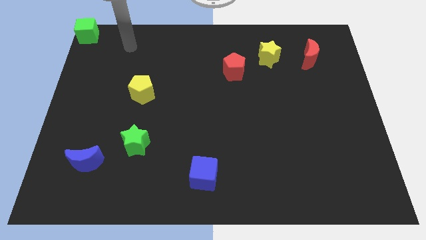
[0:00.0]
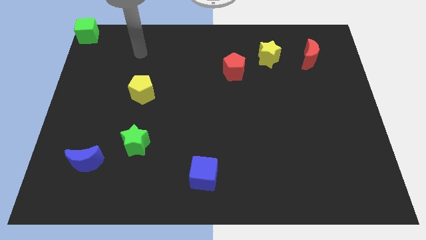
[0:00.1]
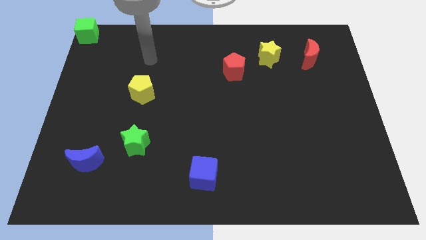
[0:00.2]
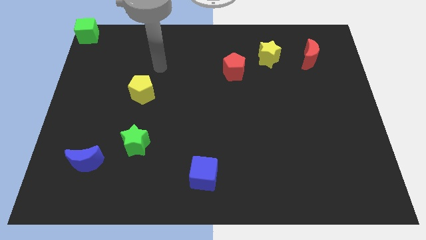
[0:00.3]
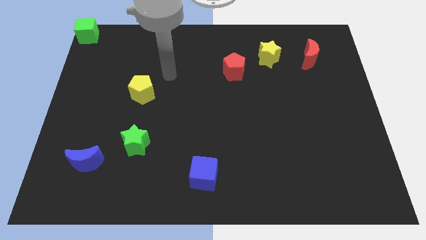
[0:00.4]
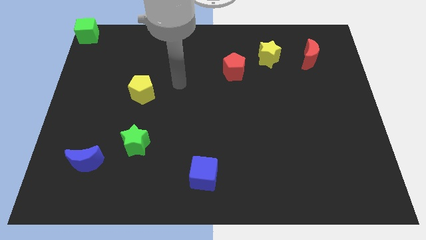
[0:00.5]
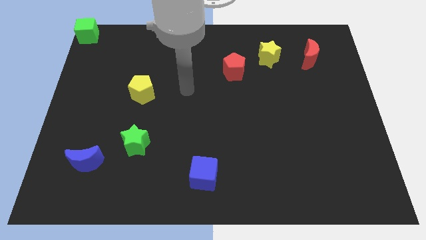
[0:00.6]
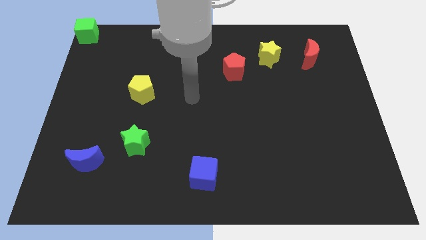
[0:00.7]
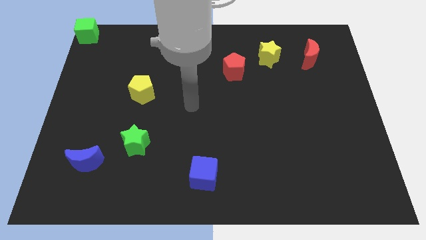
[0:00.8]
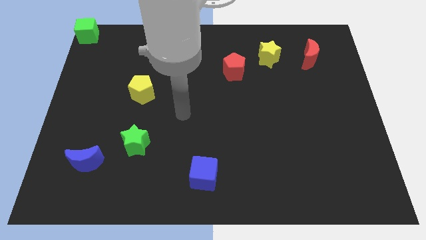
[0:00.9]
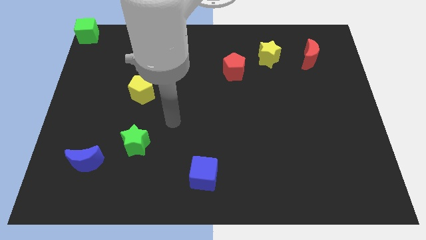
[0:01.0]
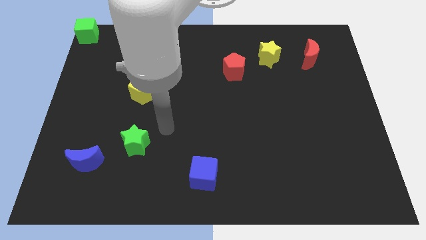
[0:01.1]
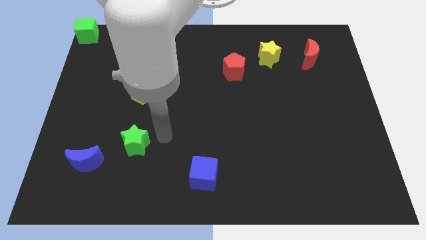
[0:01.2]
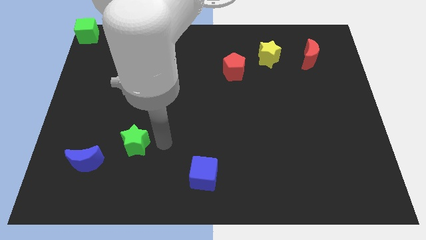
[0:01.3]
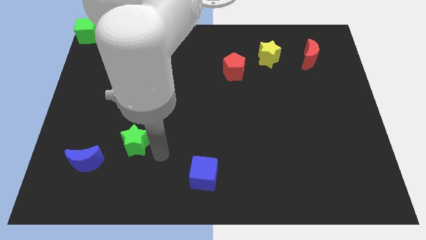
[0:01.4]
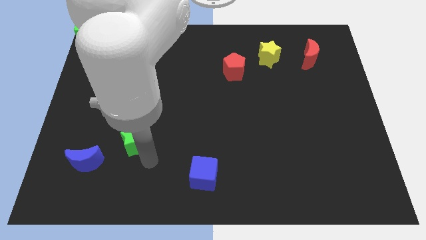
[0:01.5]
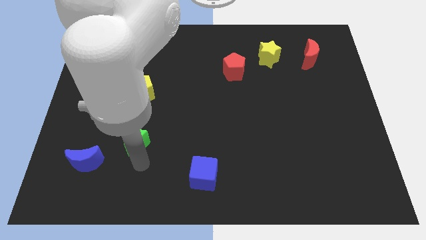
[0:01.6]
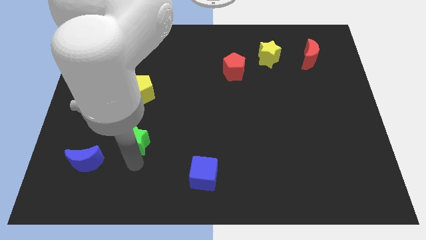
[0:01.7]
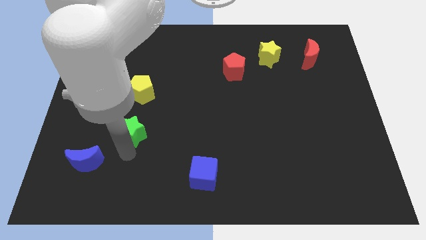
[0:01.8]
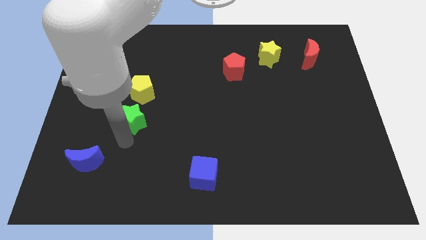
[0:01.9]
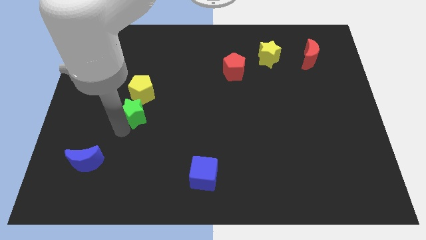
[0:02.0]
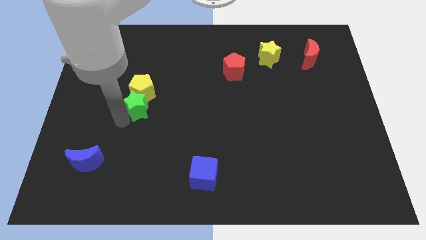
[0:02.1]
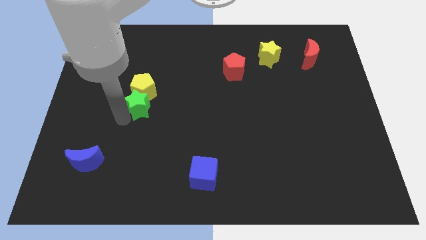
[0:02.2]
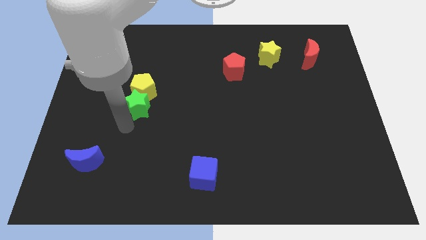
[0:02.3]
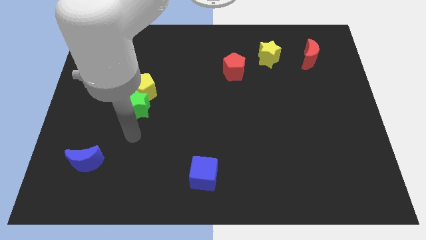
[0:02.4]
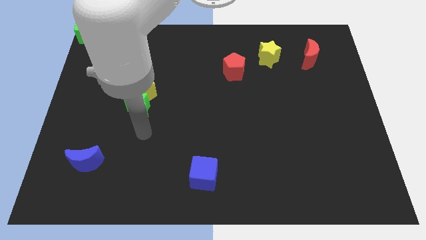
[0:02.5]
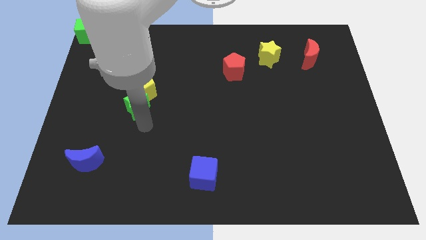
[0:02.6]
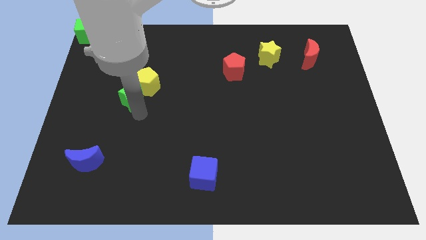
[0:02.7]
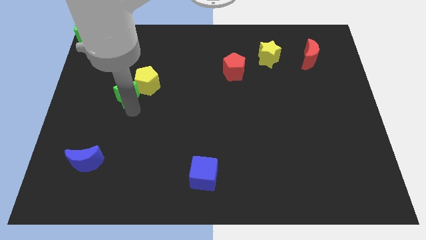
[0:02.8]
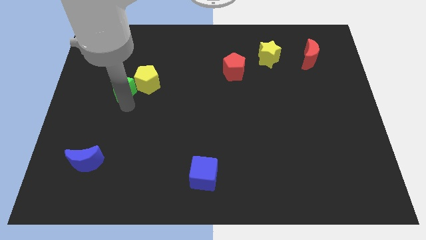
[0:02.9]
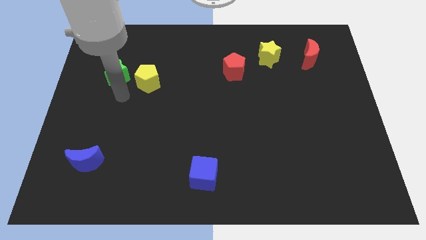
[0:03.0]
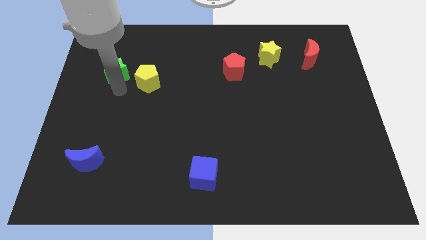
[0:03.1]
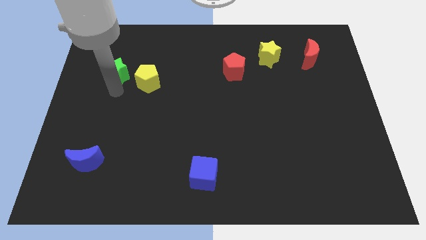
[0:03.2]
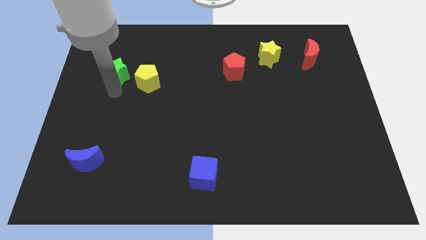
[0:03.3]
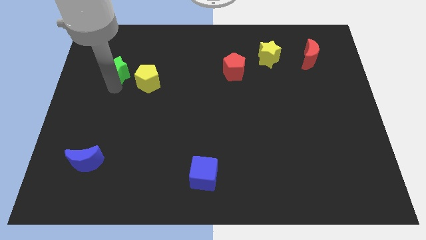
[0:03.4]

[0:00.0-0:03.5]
push the green star to the left side of the yellow pentagon

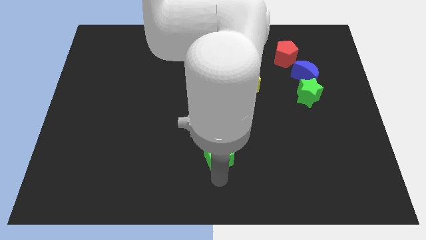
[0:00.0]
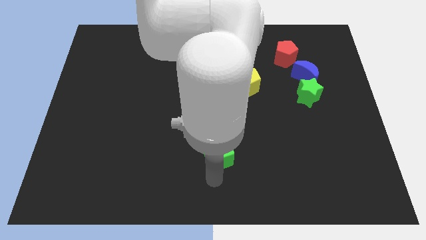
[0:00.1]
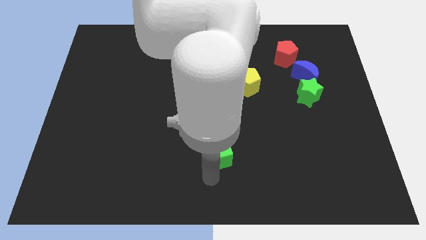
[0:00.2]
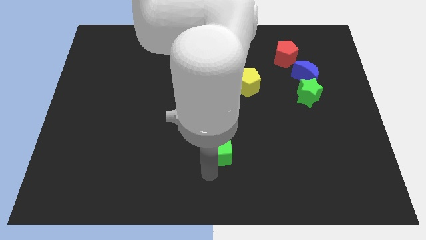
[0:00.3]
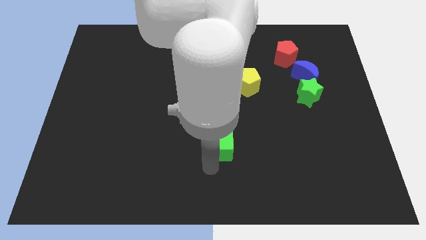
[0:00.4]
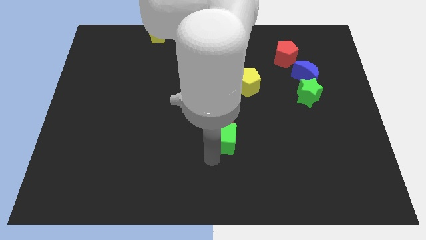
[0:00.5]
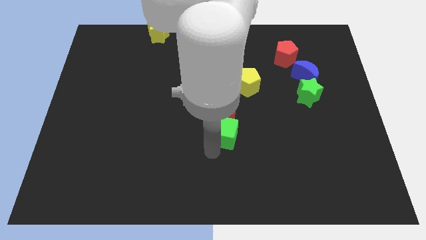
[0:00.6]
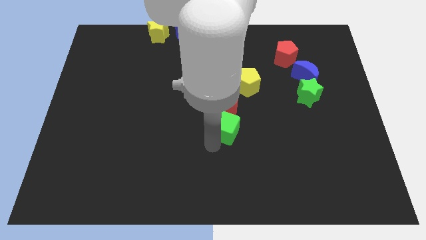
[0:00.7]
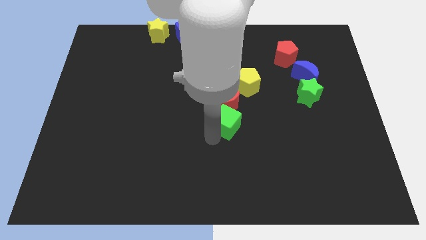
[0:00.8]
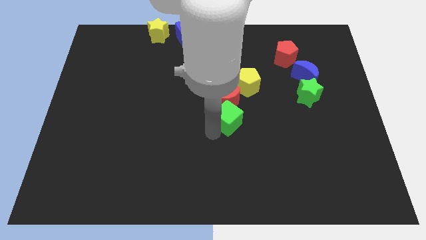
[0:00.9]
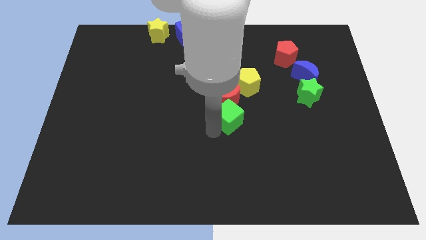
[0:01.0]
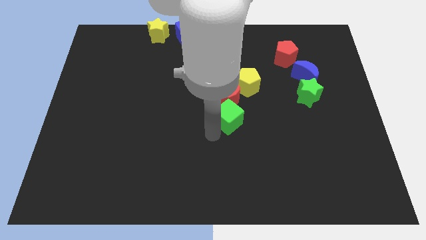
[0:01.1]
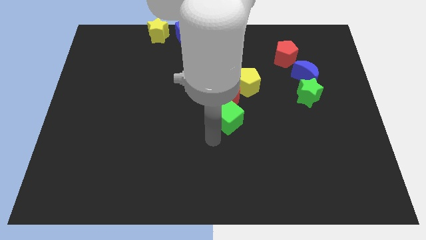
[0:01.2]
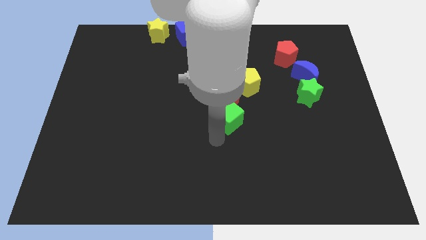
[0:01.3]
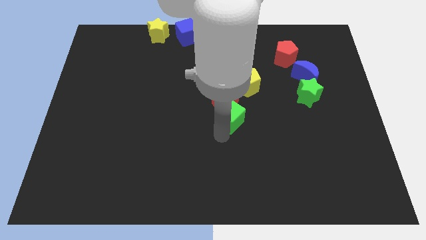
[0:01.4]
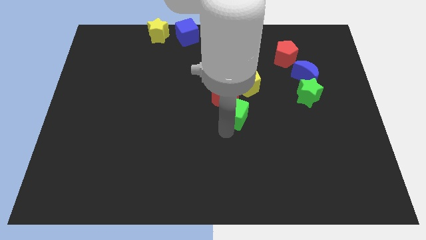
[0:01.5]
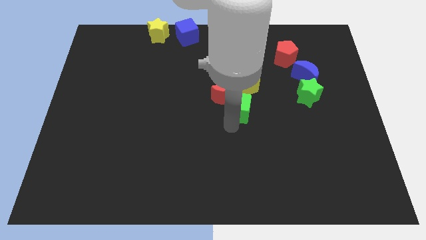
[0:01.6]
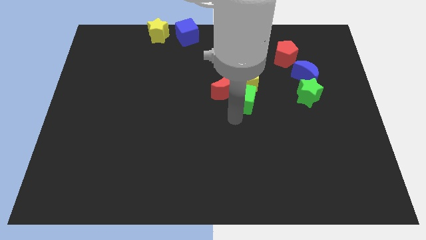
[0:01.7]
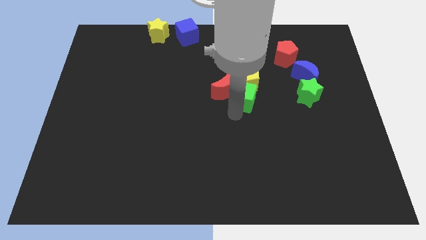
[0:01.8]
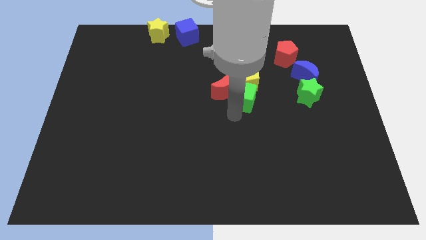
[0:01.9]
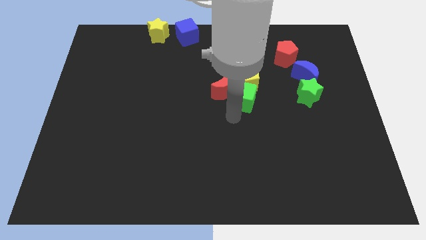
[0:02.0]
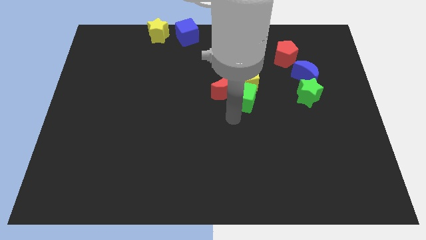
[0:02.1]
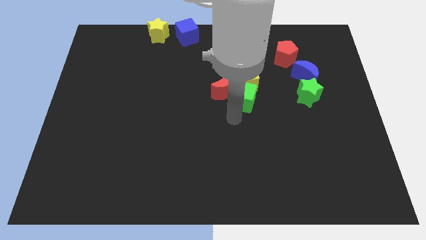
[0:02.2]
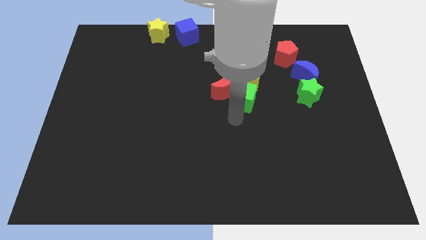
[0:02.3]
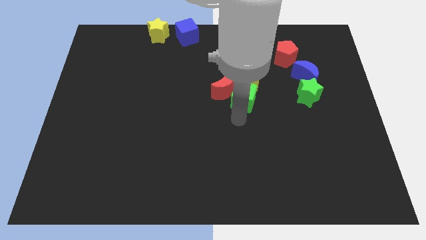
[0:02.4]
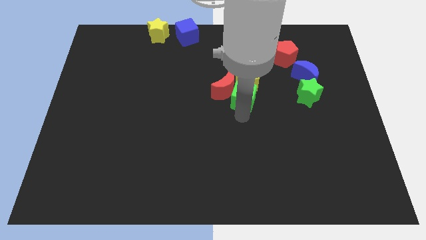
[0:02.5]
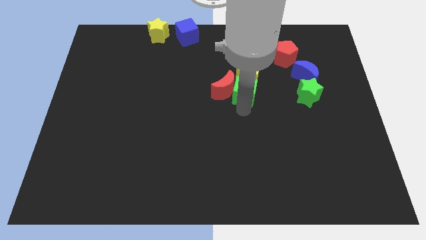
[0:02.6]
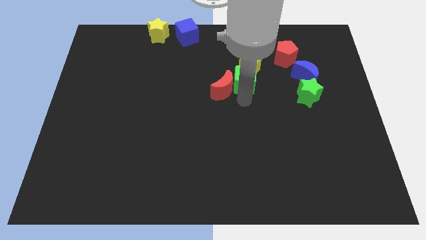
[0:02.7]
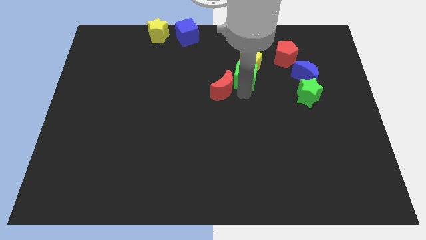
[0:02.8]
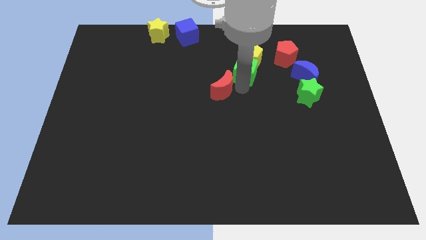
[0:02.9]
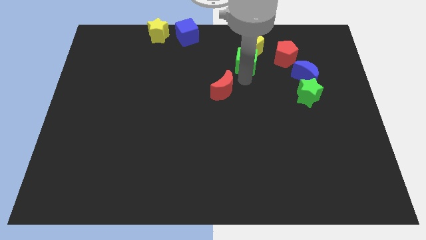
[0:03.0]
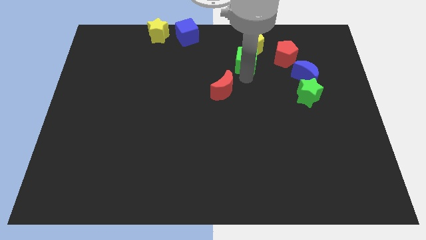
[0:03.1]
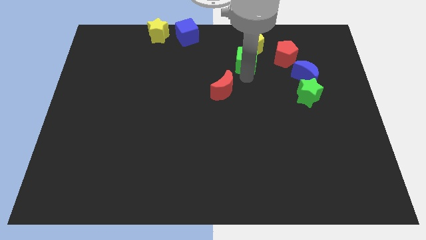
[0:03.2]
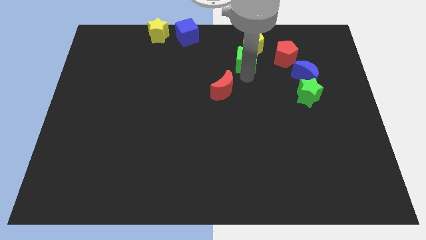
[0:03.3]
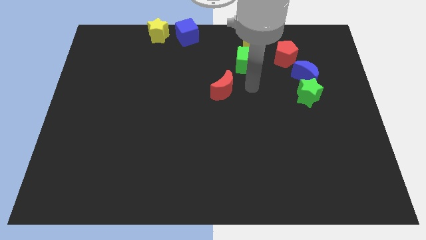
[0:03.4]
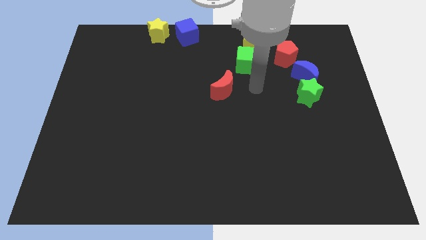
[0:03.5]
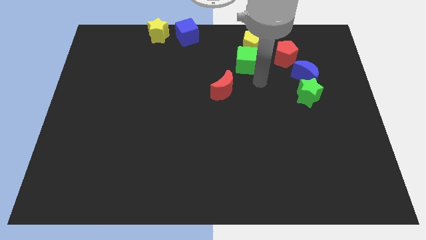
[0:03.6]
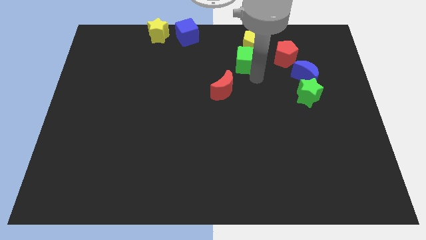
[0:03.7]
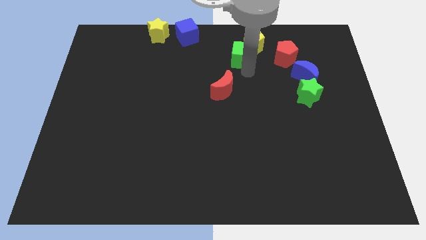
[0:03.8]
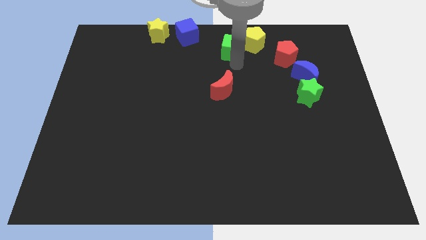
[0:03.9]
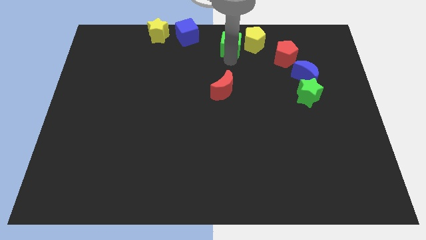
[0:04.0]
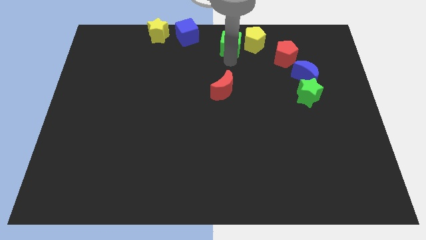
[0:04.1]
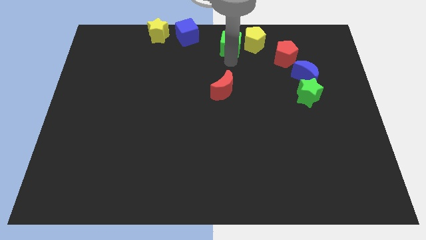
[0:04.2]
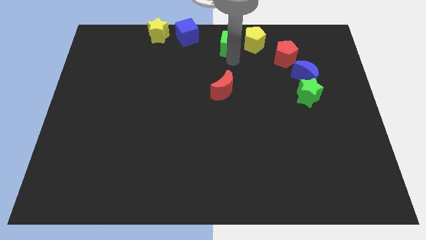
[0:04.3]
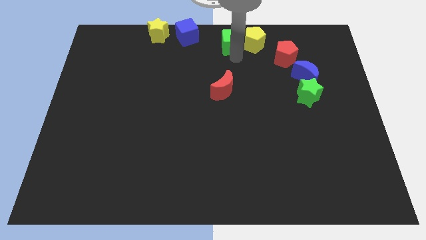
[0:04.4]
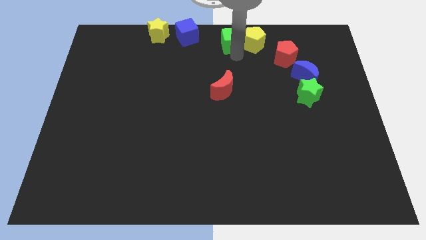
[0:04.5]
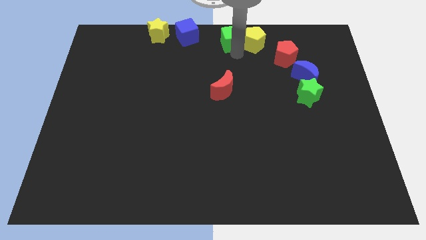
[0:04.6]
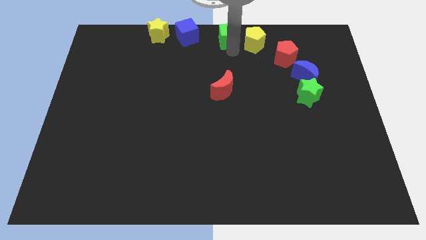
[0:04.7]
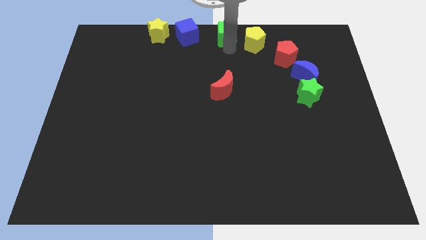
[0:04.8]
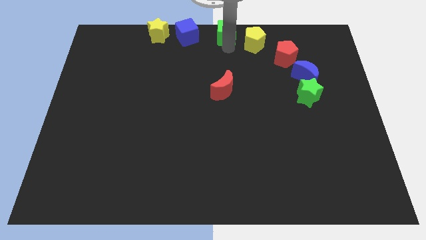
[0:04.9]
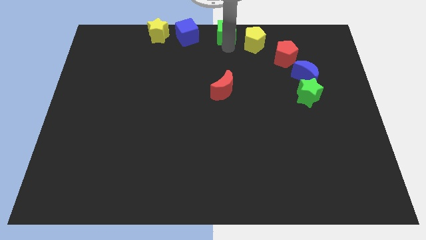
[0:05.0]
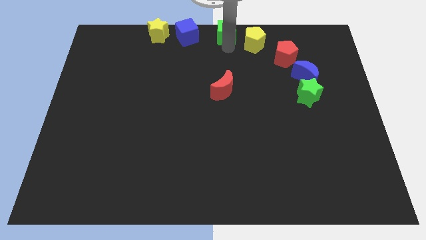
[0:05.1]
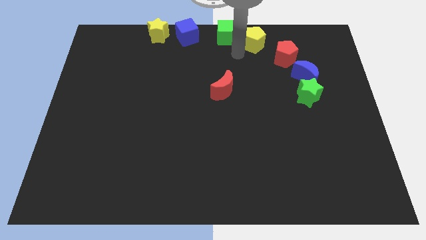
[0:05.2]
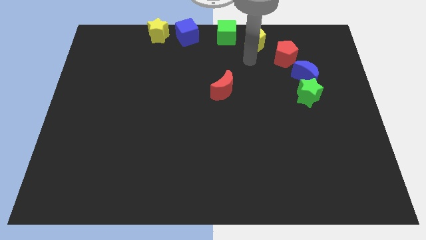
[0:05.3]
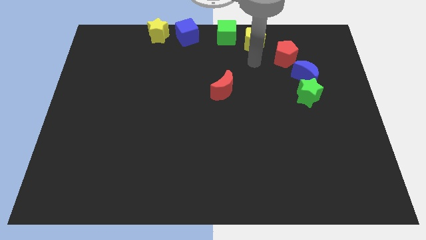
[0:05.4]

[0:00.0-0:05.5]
move the green cube to the top center of board

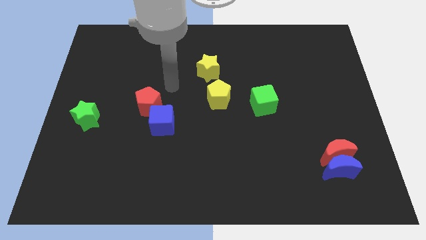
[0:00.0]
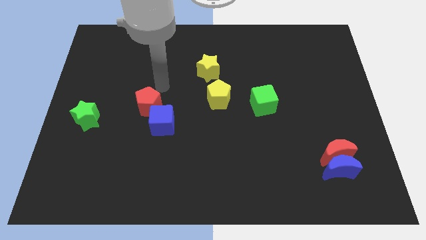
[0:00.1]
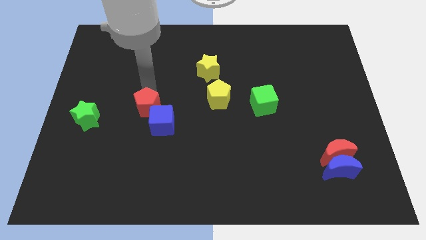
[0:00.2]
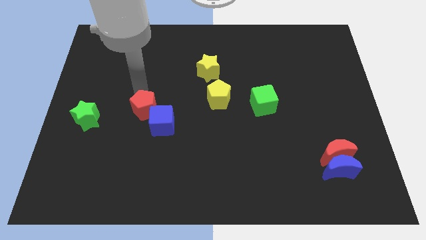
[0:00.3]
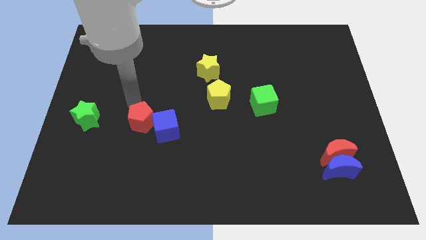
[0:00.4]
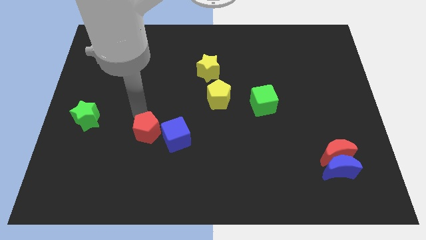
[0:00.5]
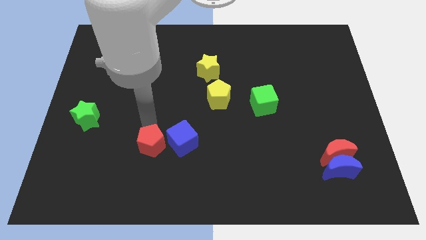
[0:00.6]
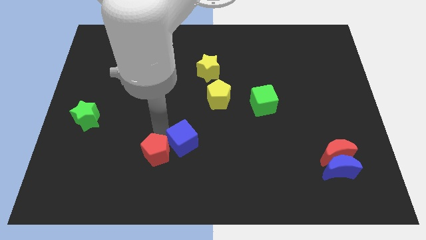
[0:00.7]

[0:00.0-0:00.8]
push red pentagon into the blue cube
